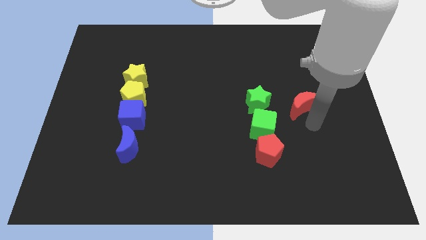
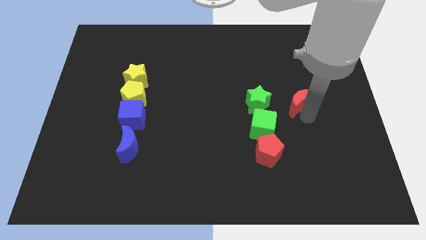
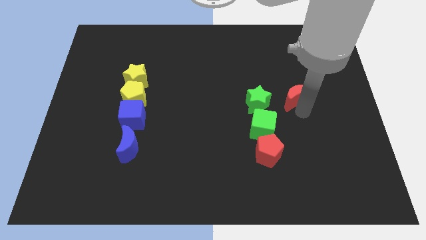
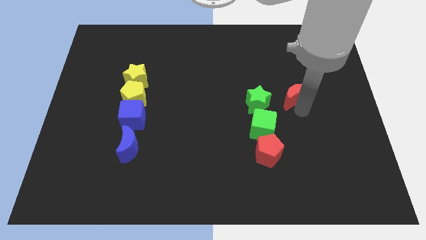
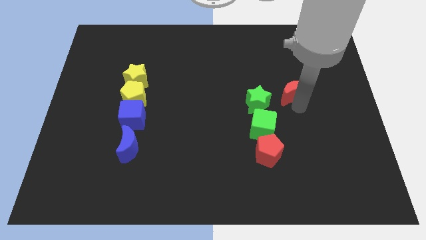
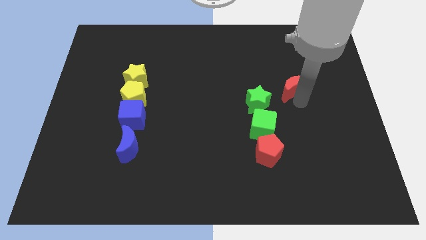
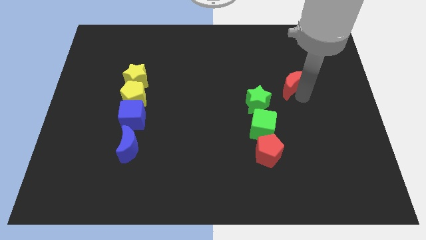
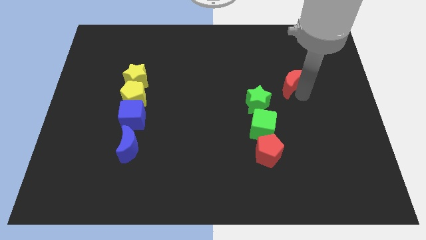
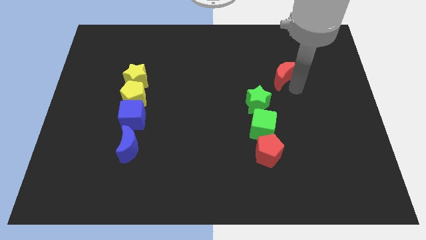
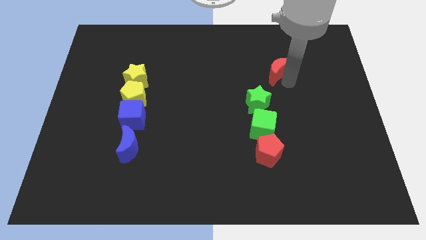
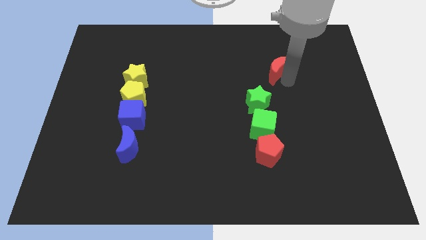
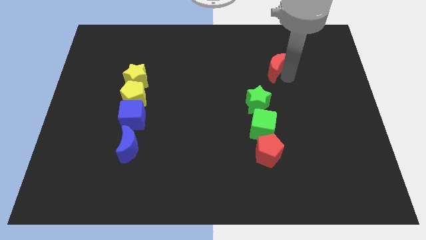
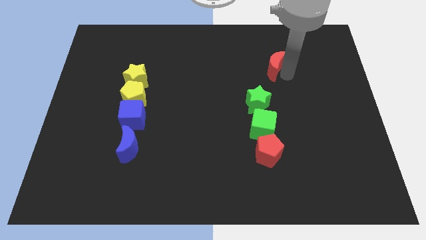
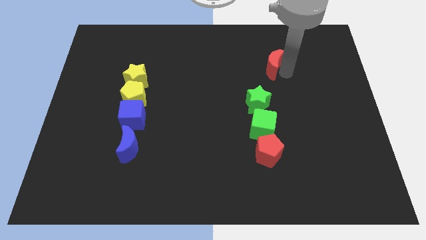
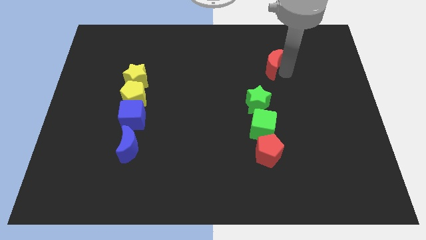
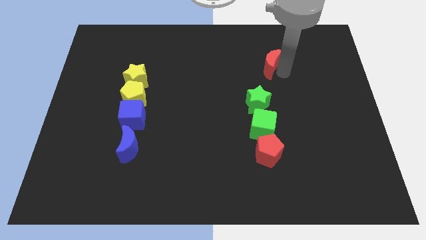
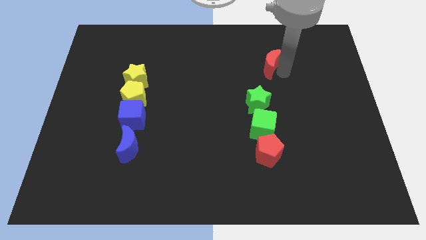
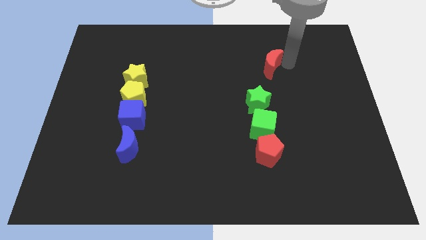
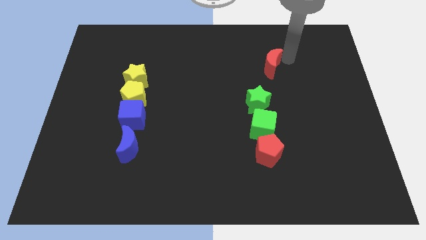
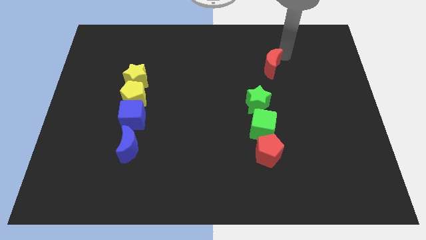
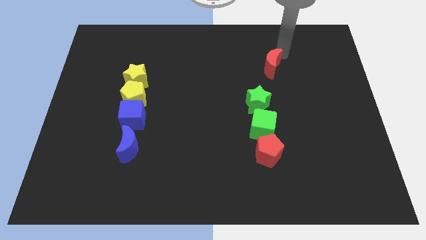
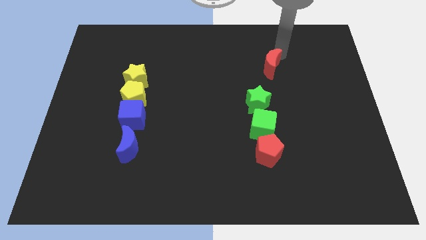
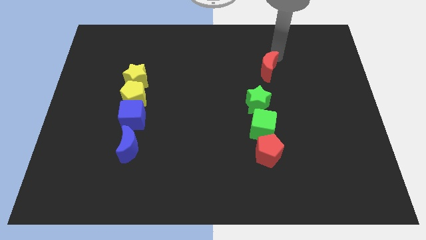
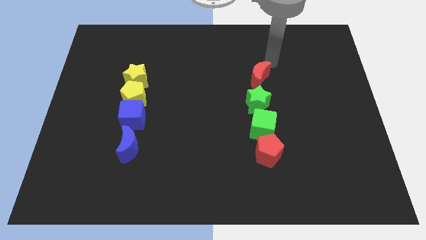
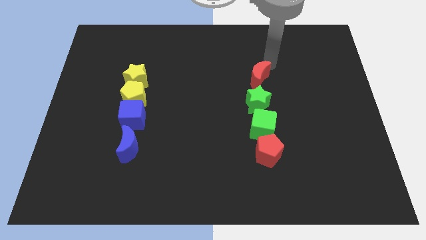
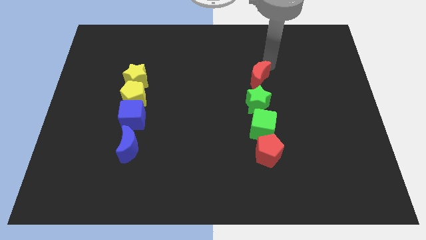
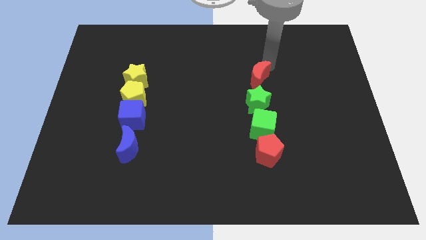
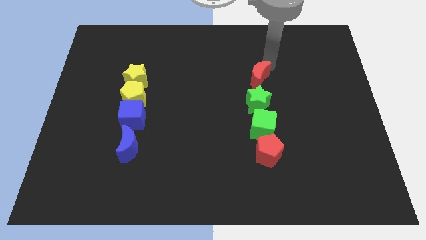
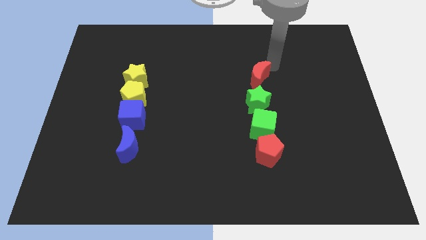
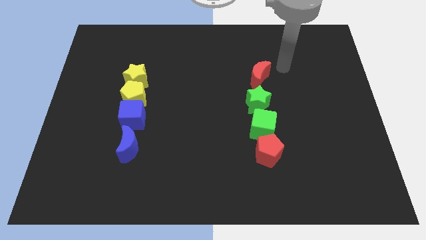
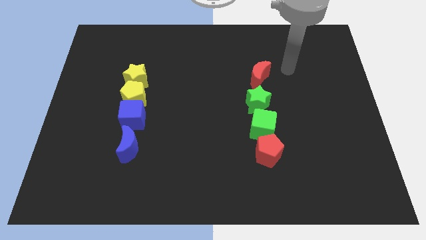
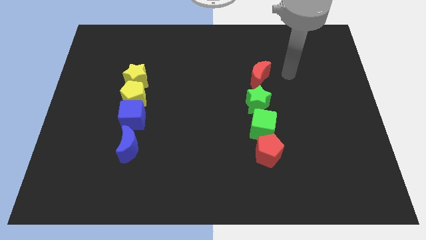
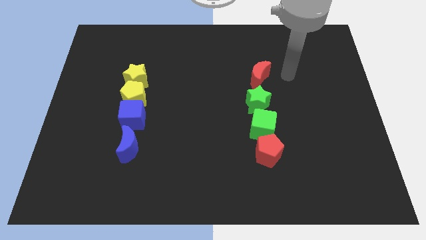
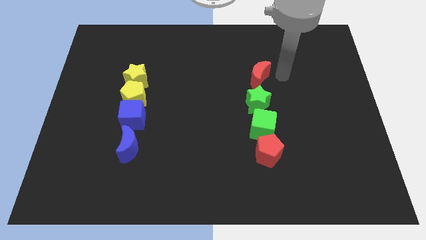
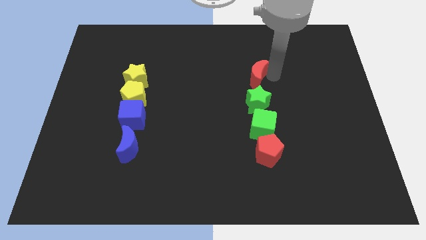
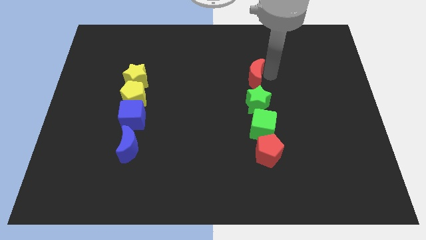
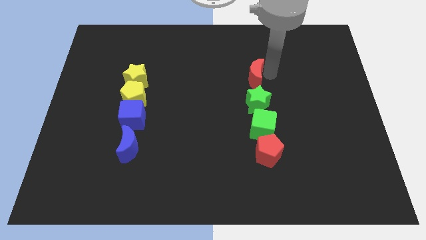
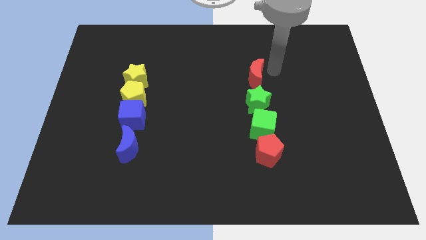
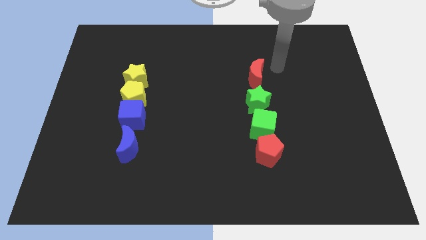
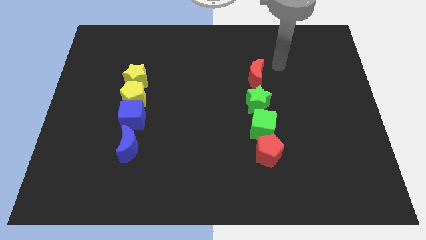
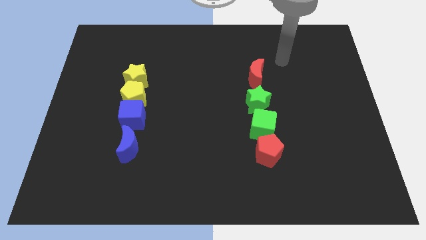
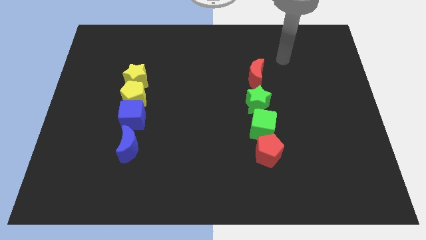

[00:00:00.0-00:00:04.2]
place red moon to the right of the green star

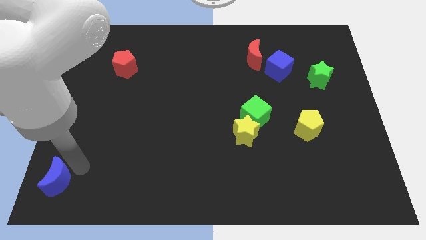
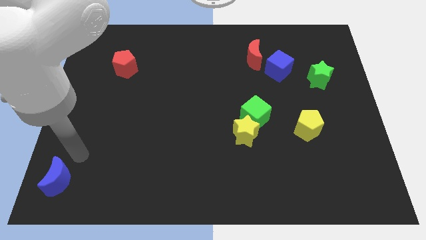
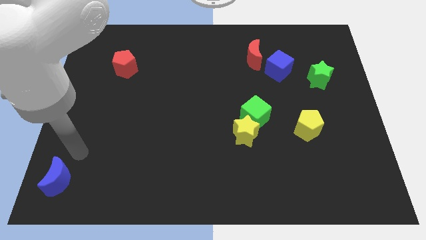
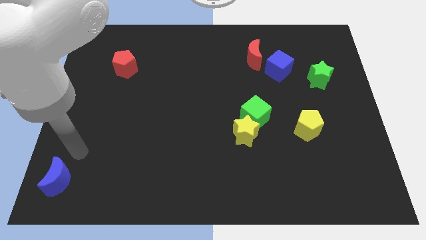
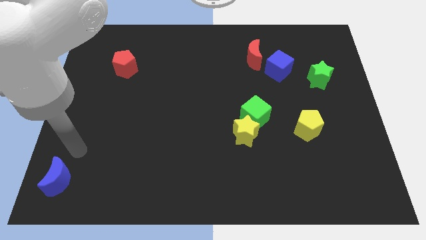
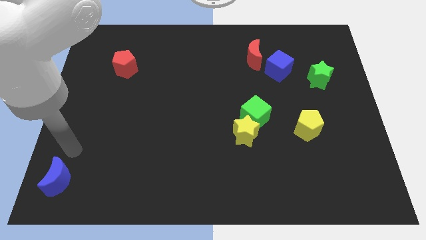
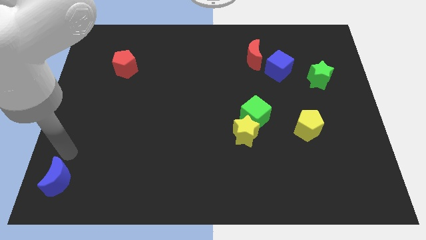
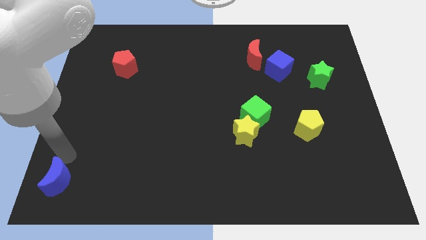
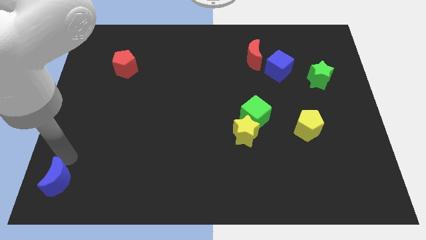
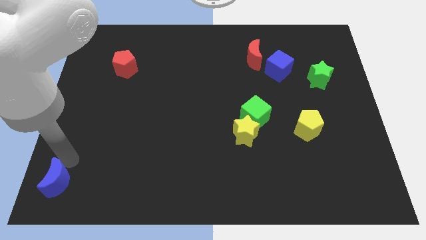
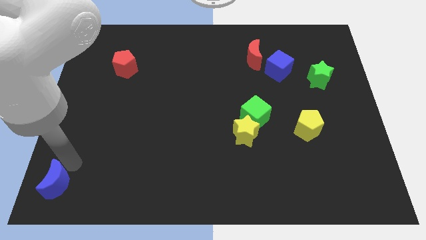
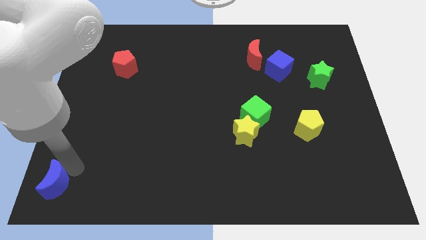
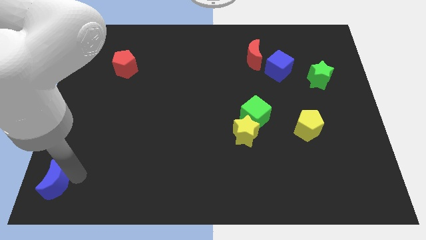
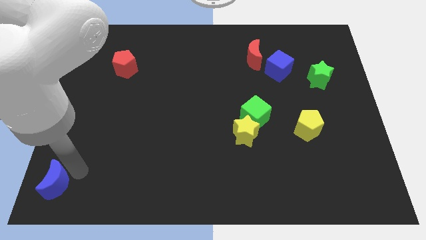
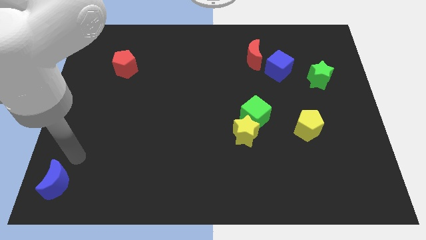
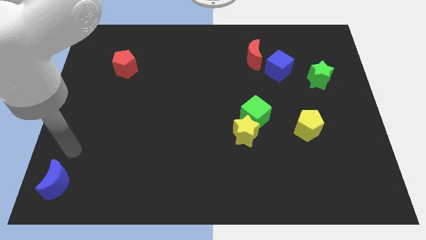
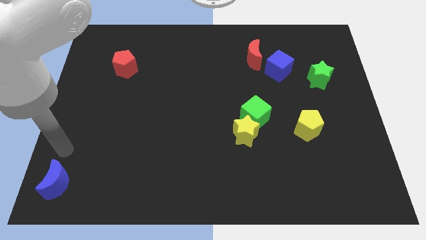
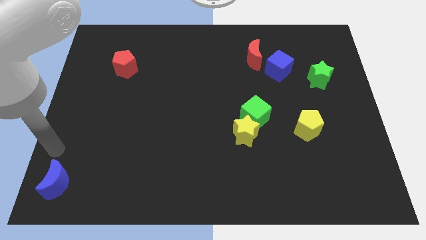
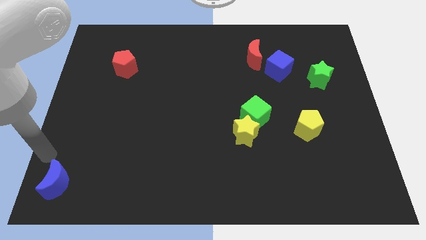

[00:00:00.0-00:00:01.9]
place the blue moon to the bottom left

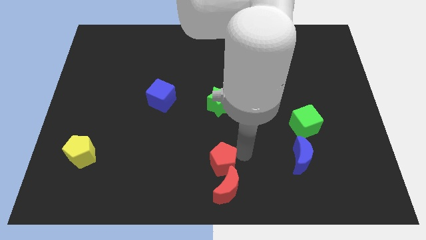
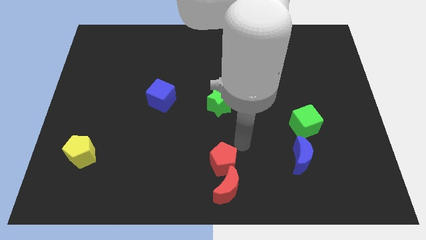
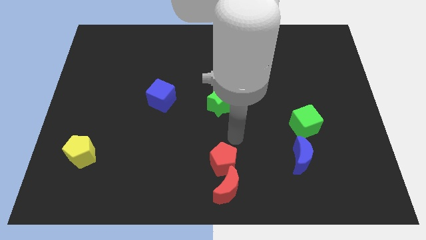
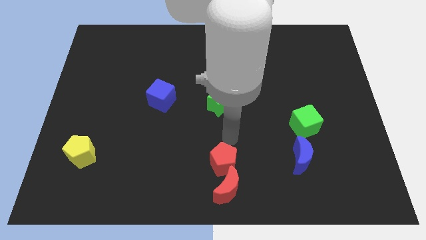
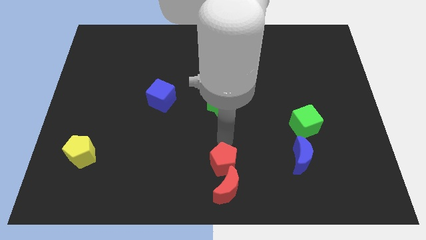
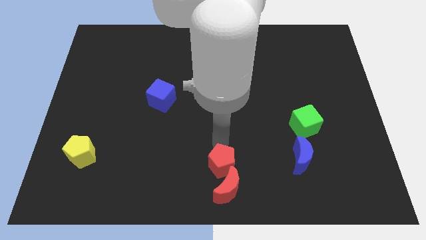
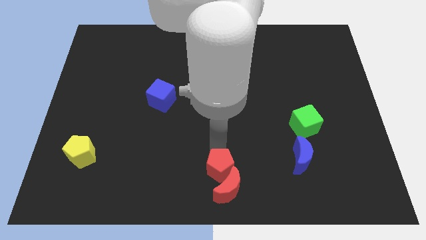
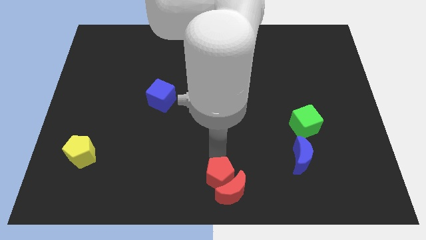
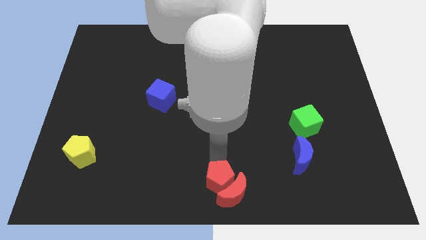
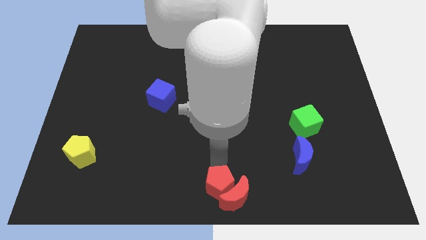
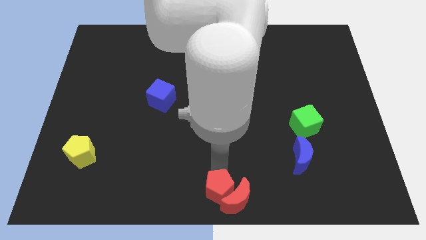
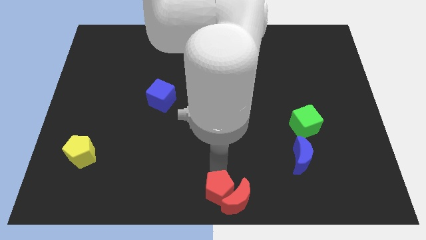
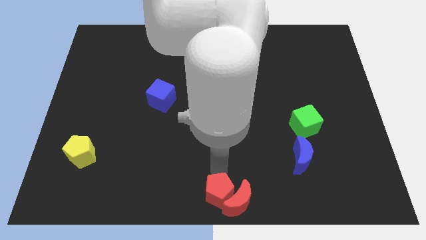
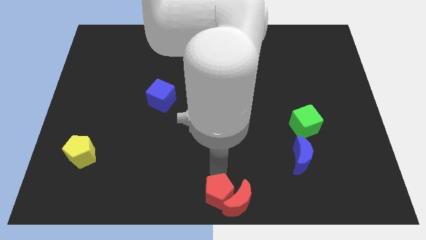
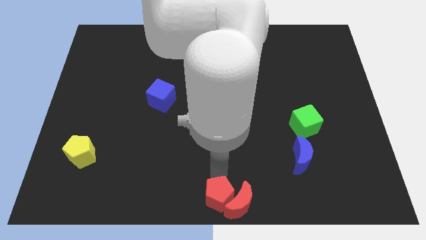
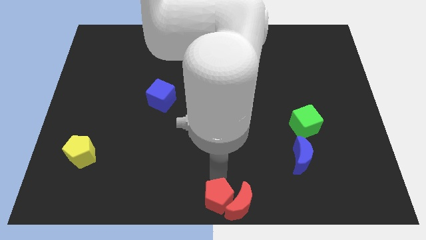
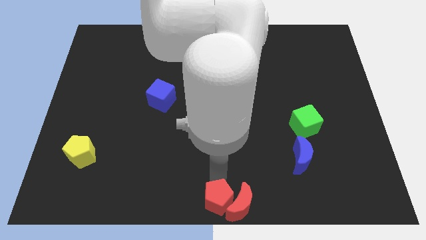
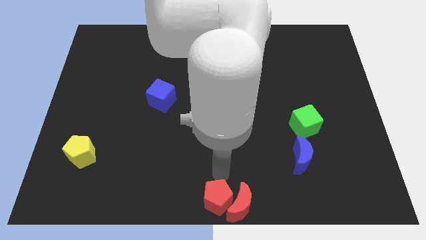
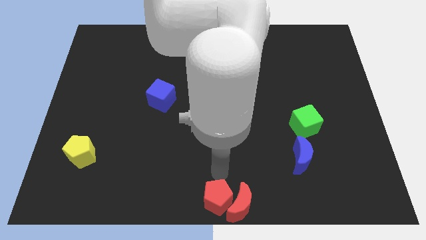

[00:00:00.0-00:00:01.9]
push the red pentagon into the red moon

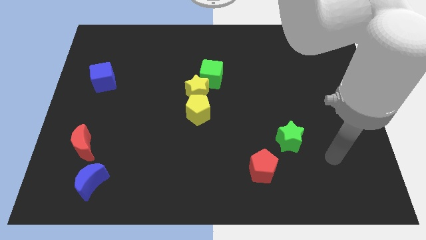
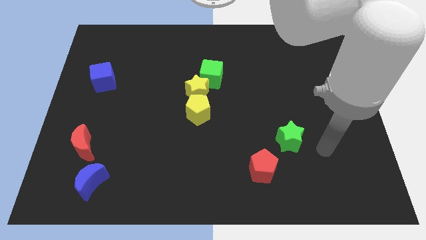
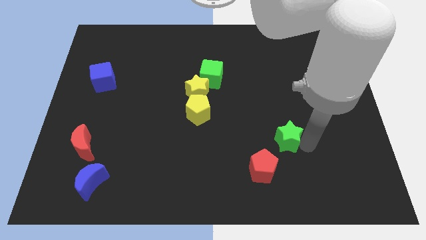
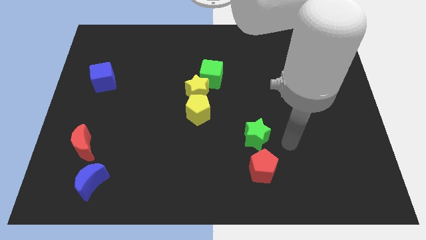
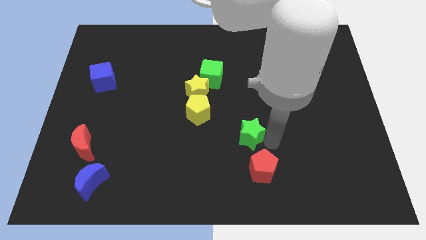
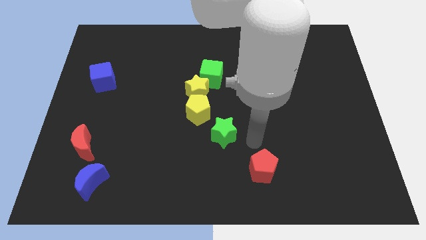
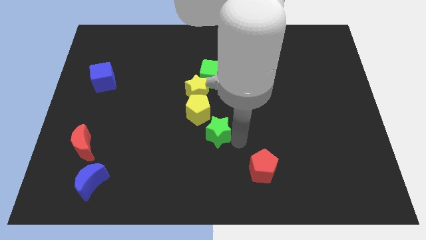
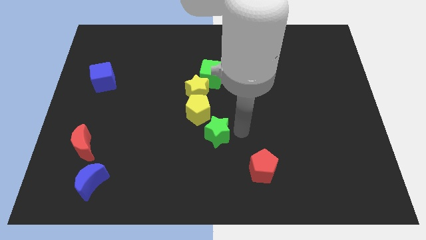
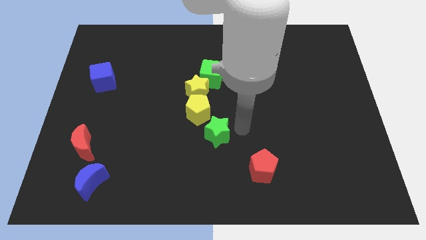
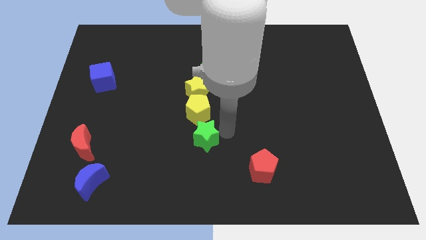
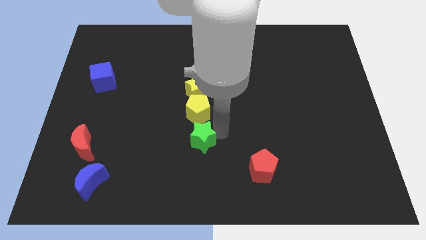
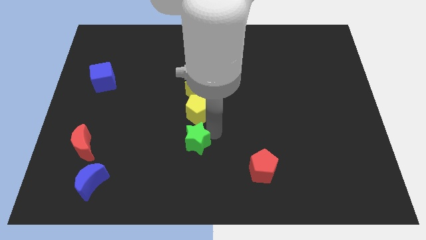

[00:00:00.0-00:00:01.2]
move the green star to the bottom of the yellow pentagon
